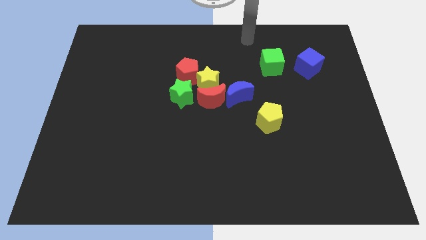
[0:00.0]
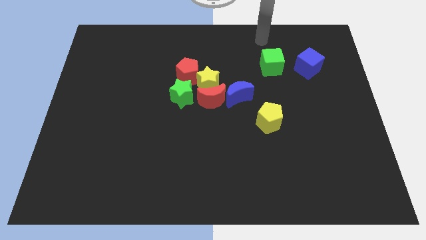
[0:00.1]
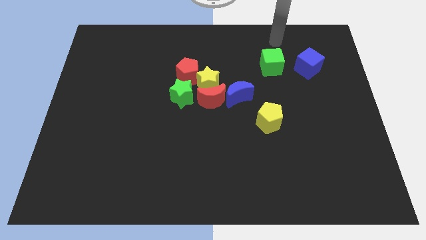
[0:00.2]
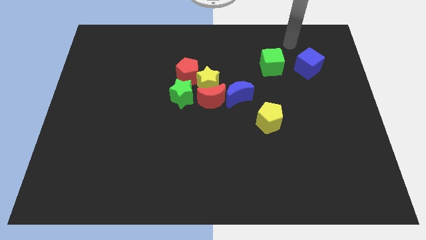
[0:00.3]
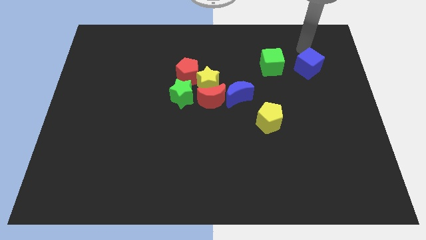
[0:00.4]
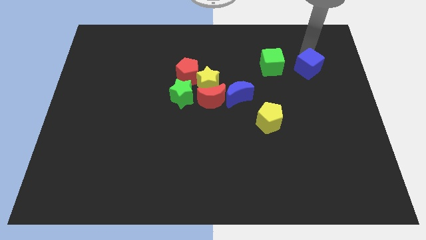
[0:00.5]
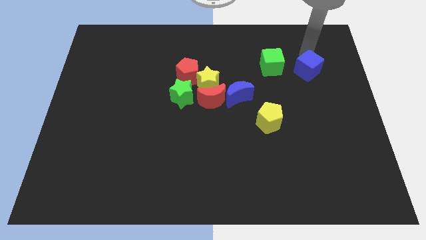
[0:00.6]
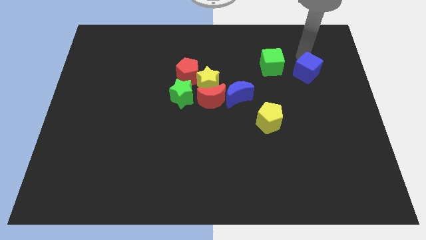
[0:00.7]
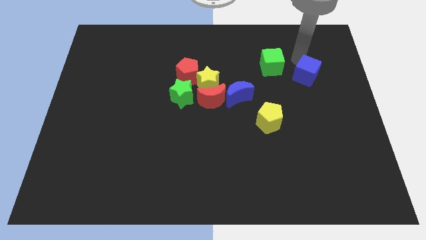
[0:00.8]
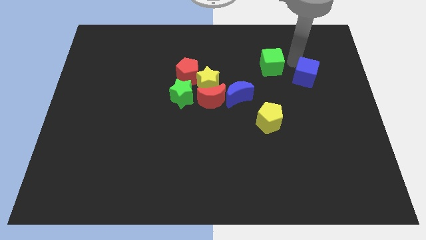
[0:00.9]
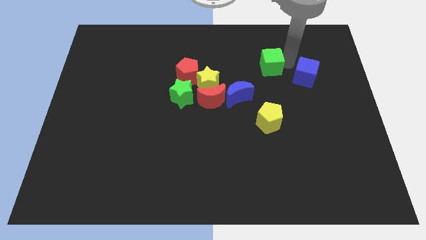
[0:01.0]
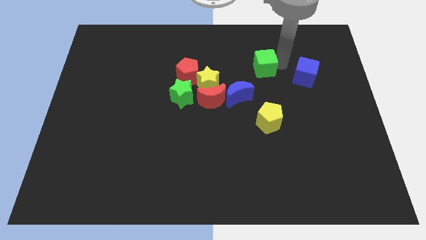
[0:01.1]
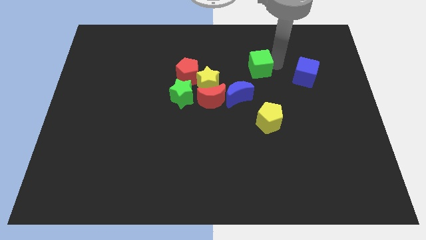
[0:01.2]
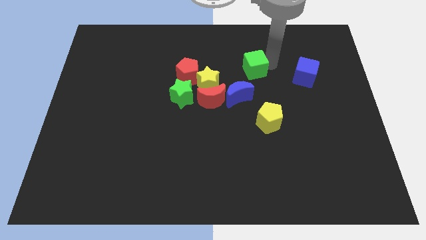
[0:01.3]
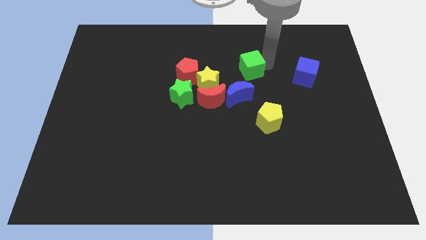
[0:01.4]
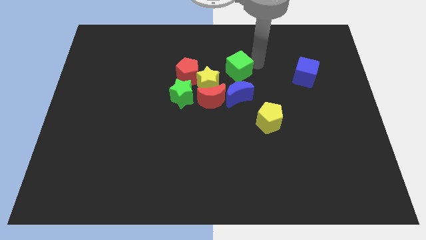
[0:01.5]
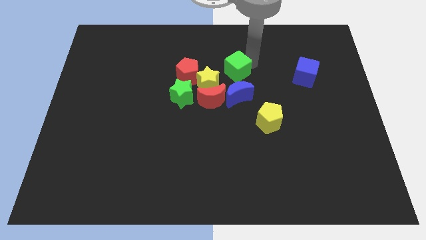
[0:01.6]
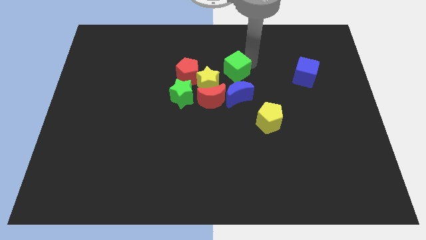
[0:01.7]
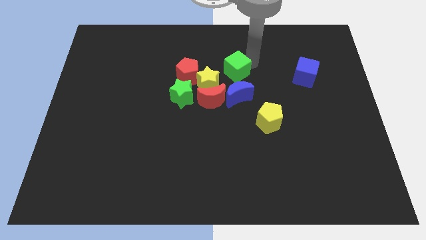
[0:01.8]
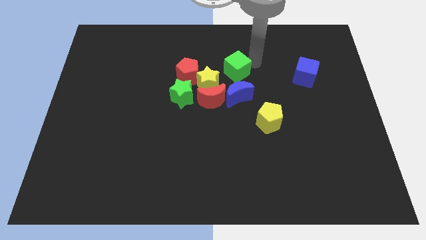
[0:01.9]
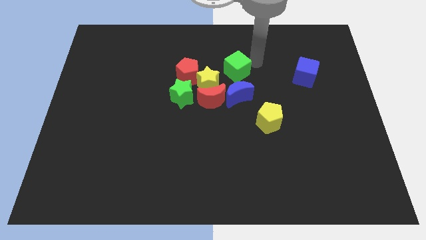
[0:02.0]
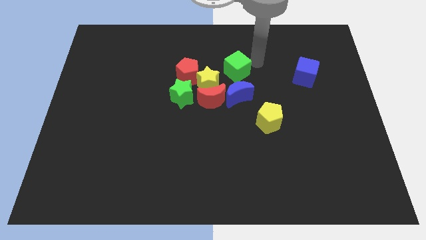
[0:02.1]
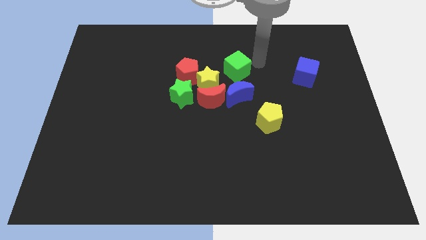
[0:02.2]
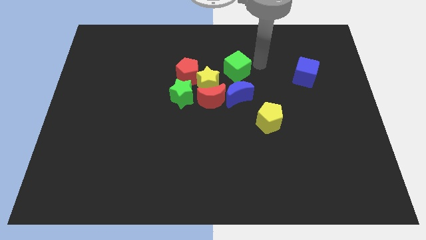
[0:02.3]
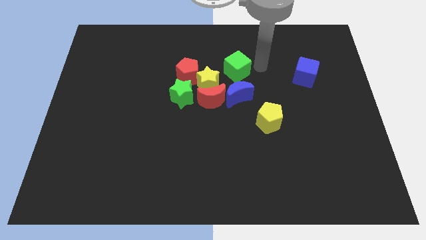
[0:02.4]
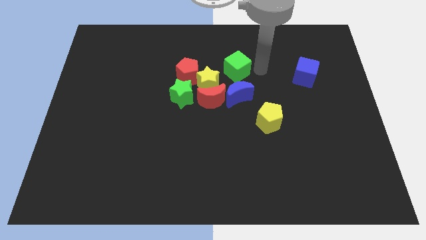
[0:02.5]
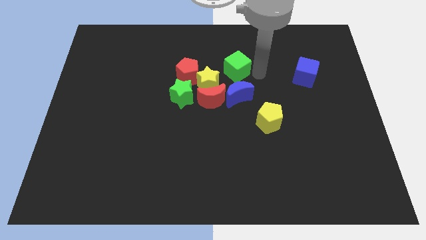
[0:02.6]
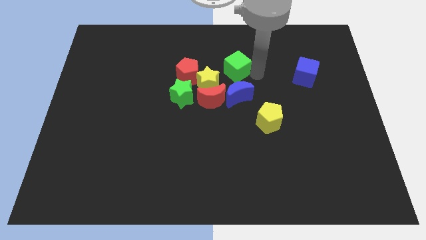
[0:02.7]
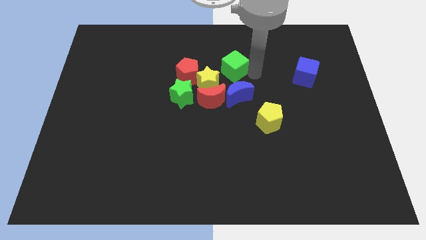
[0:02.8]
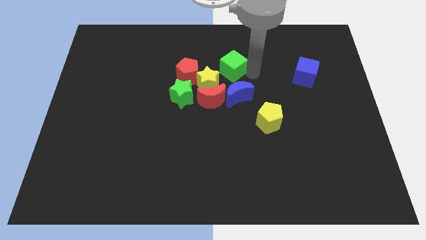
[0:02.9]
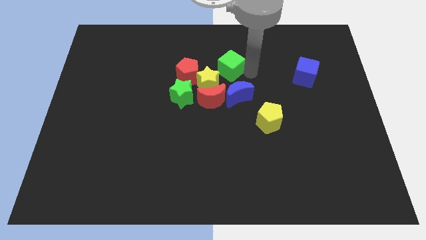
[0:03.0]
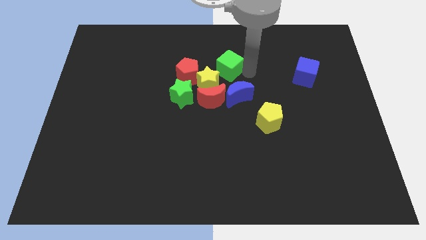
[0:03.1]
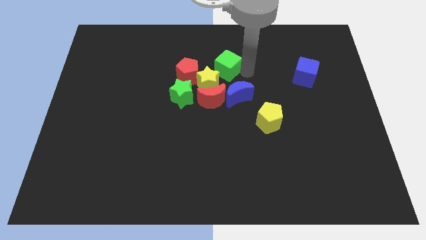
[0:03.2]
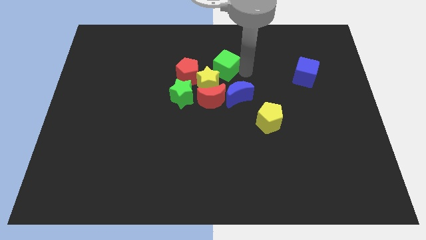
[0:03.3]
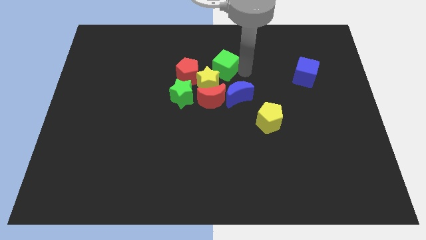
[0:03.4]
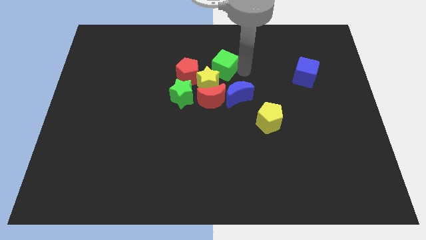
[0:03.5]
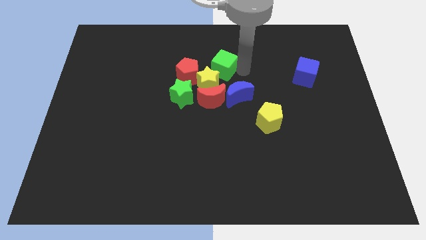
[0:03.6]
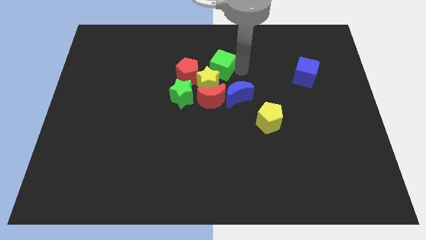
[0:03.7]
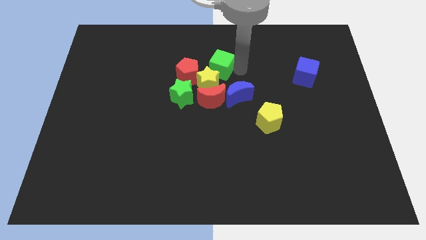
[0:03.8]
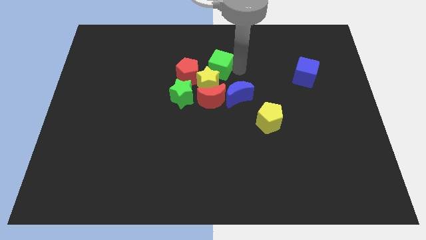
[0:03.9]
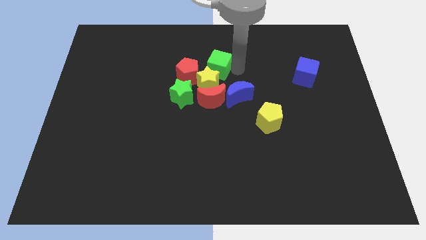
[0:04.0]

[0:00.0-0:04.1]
slide the green cube on the top right of the yellow star

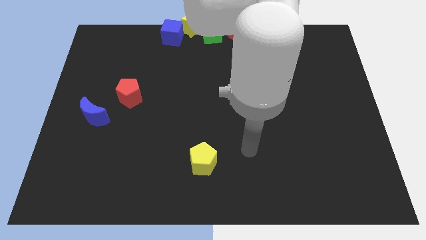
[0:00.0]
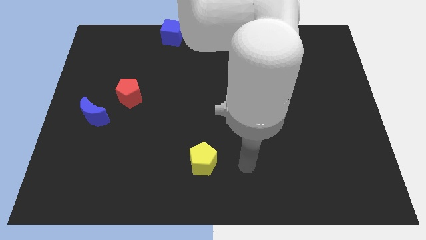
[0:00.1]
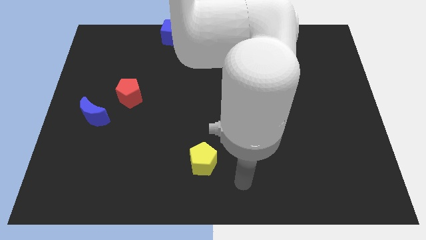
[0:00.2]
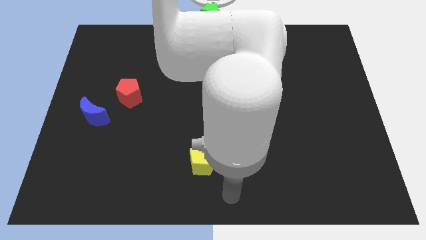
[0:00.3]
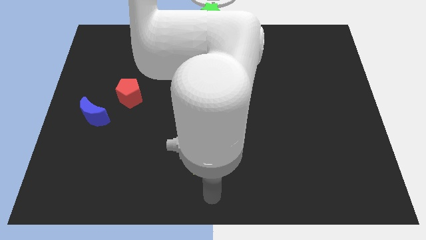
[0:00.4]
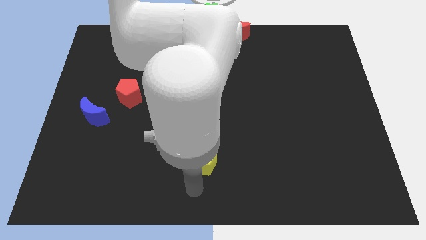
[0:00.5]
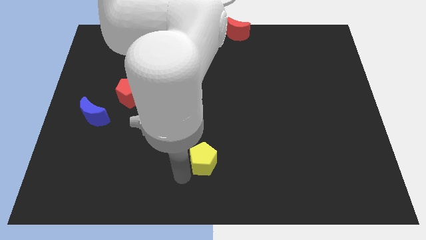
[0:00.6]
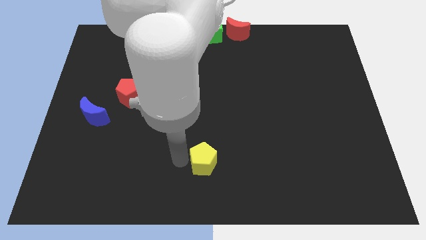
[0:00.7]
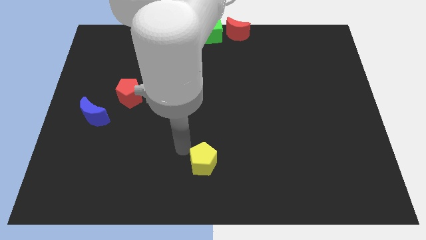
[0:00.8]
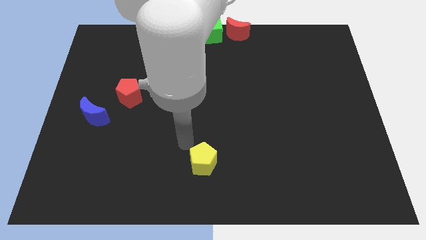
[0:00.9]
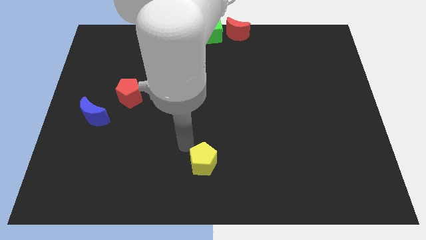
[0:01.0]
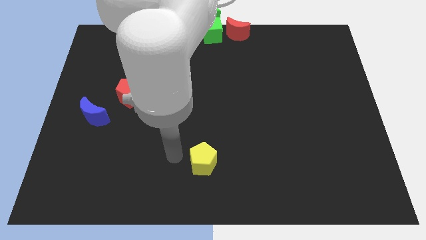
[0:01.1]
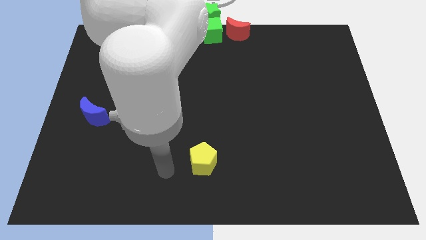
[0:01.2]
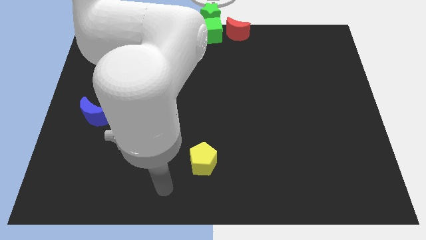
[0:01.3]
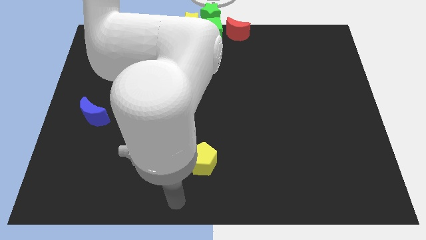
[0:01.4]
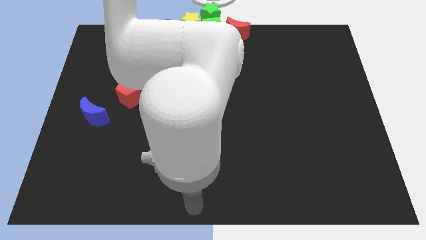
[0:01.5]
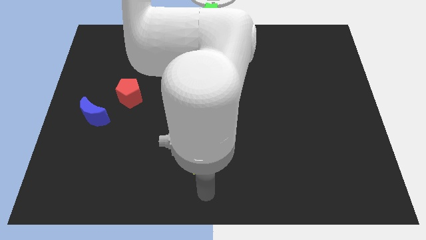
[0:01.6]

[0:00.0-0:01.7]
move your arm to the bottom of the yellow pentagon

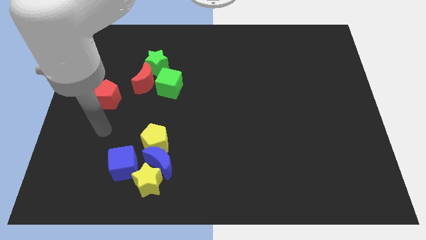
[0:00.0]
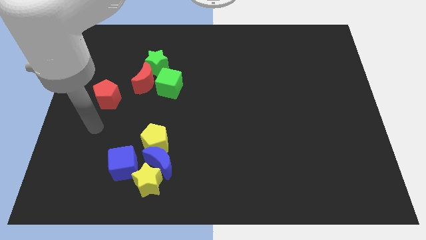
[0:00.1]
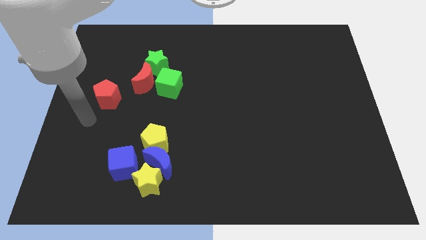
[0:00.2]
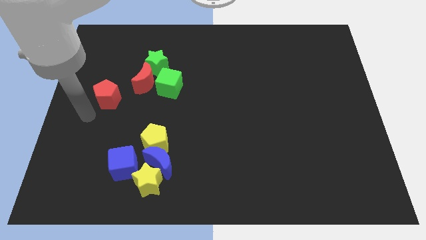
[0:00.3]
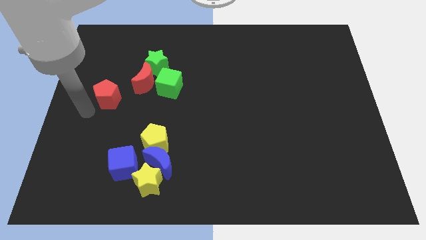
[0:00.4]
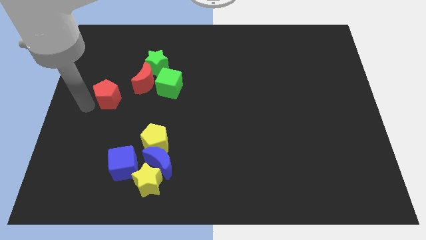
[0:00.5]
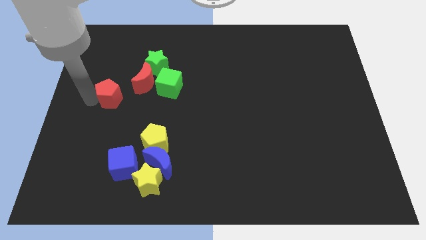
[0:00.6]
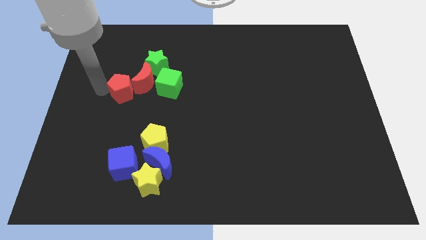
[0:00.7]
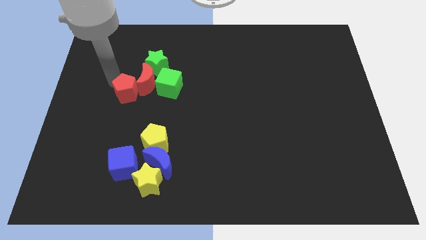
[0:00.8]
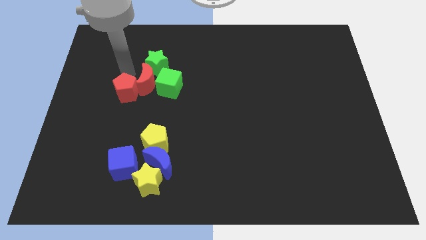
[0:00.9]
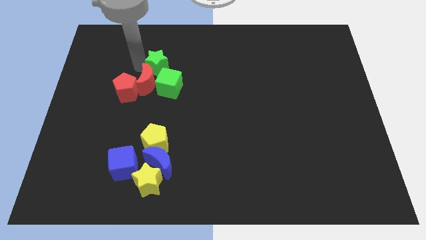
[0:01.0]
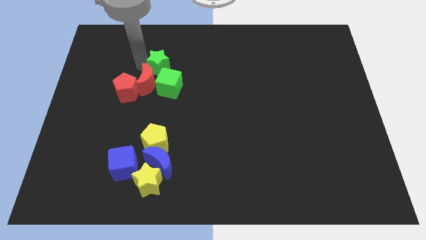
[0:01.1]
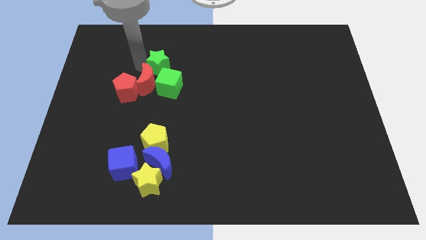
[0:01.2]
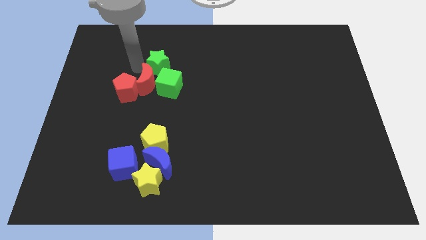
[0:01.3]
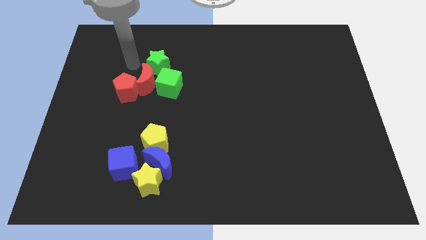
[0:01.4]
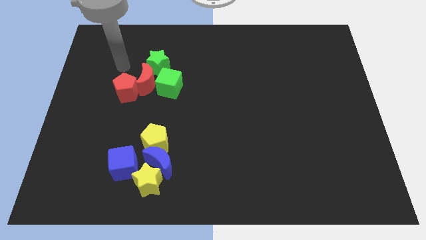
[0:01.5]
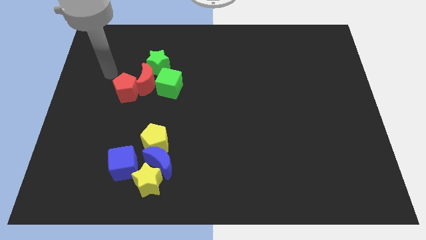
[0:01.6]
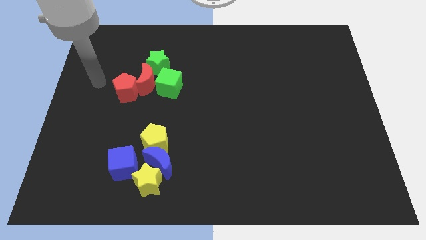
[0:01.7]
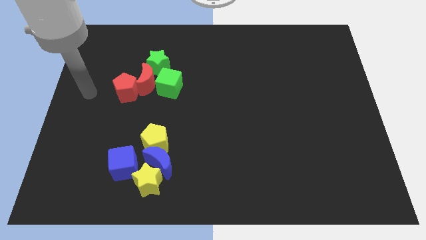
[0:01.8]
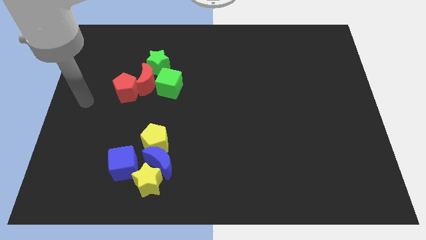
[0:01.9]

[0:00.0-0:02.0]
slide the red pentagon into the red crescent

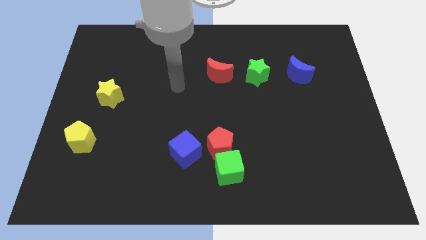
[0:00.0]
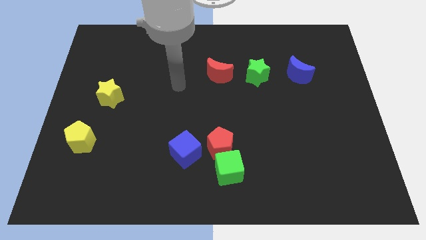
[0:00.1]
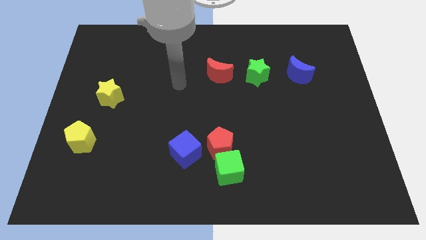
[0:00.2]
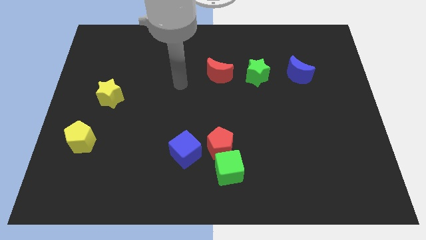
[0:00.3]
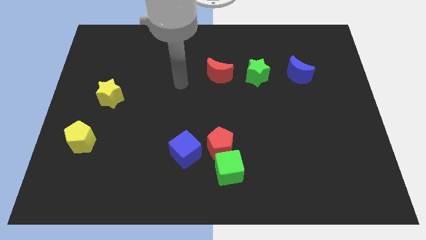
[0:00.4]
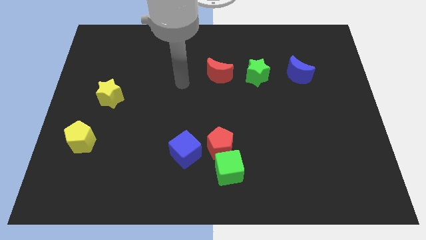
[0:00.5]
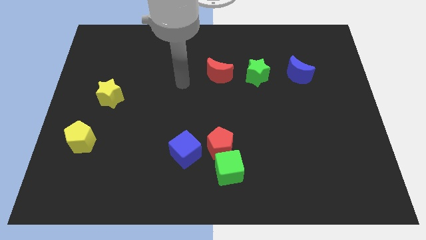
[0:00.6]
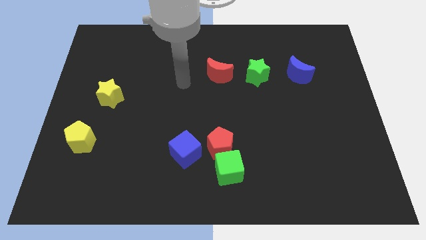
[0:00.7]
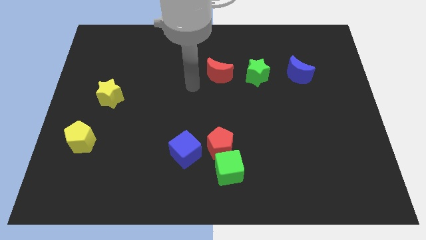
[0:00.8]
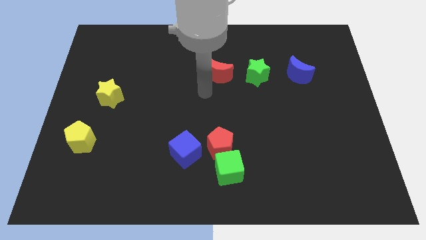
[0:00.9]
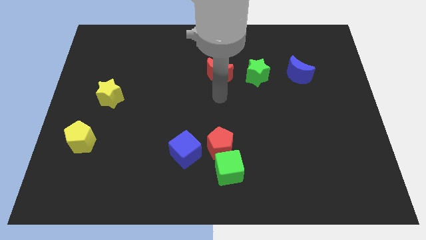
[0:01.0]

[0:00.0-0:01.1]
place your hand in between the red moon and red pentagon

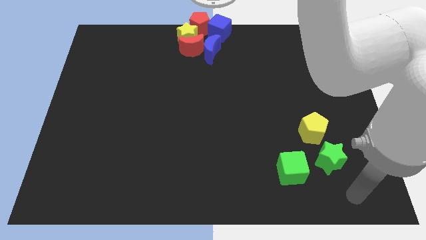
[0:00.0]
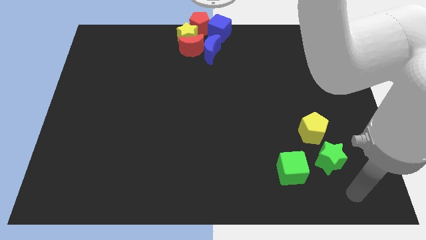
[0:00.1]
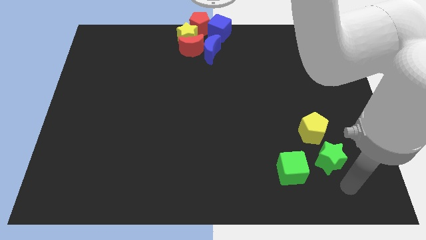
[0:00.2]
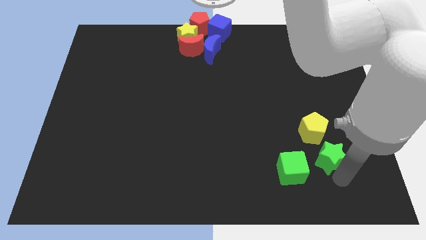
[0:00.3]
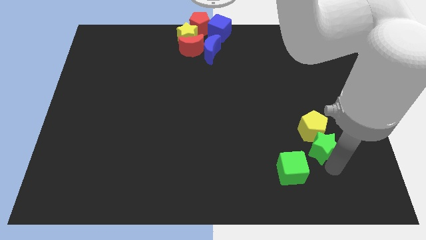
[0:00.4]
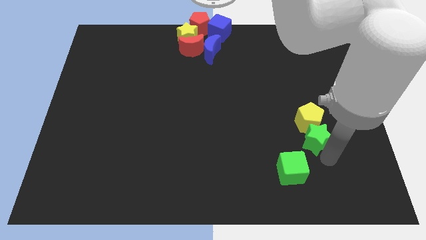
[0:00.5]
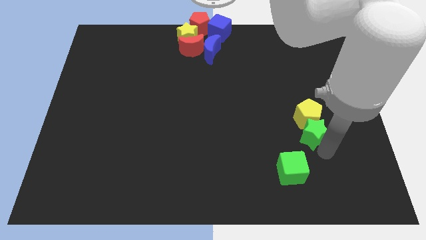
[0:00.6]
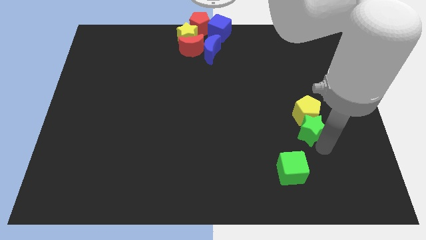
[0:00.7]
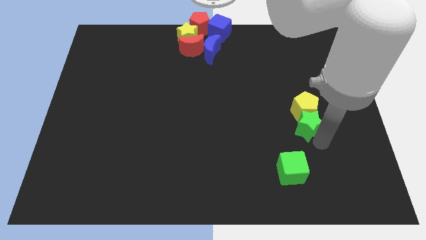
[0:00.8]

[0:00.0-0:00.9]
push the green star along with the yellow pentagon slightly to the top
